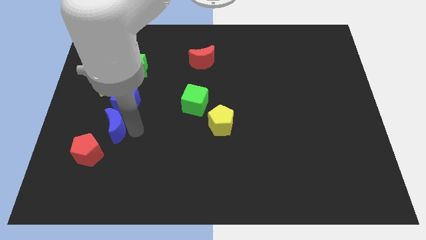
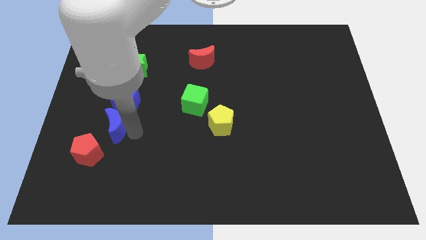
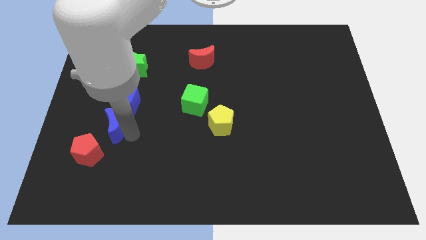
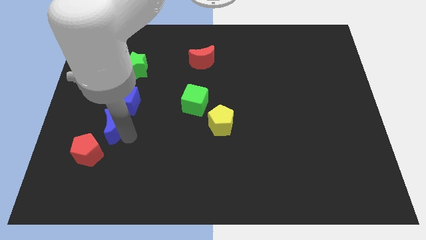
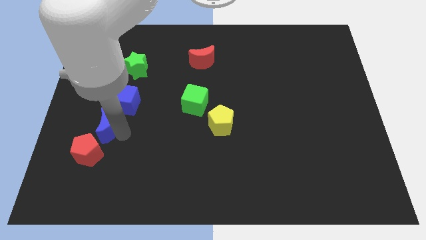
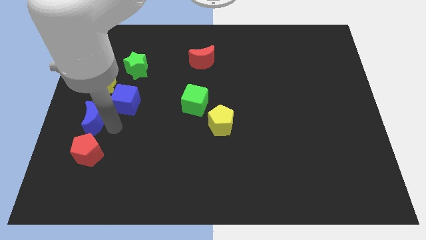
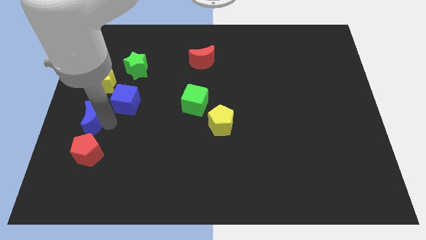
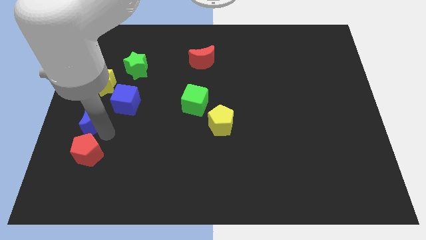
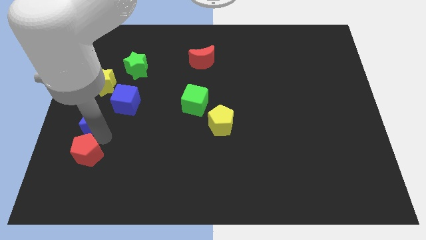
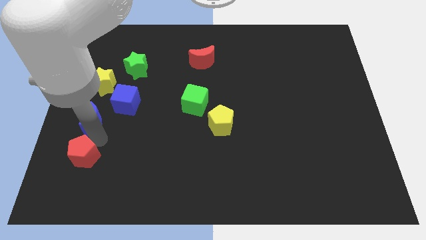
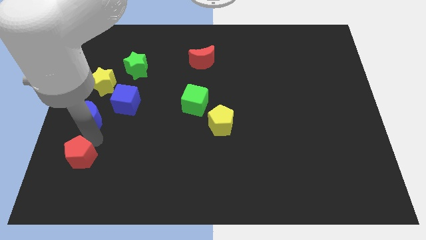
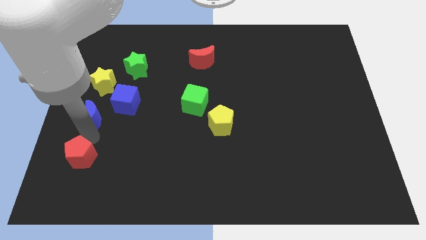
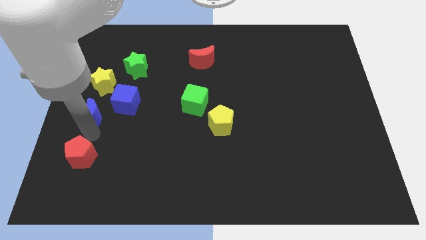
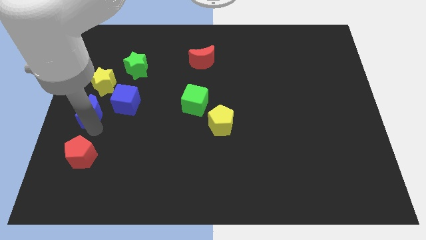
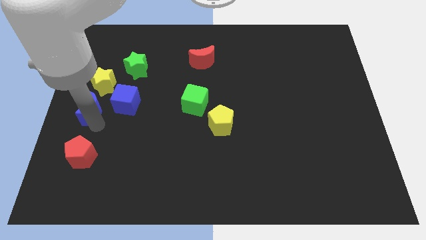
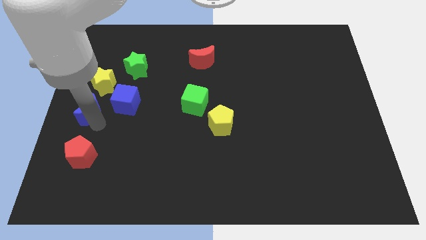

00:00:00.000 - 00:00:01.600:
move the blue moon away from the blue cube

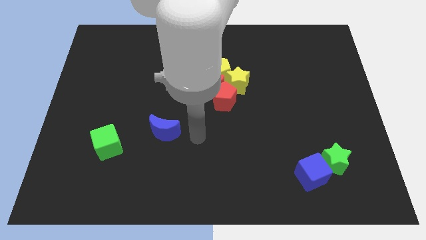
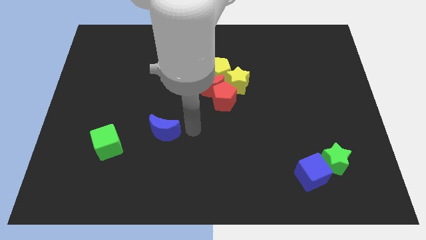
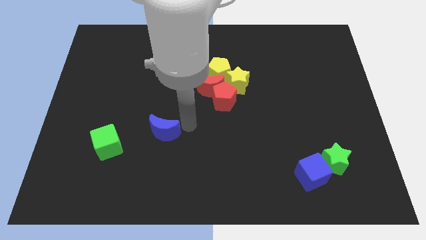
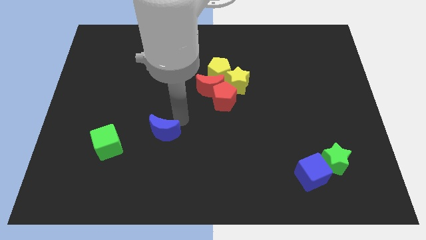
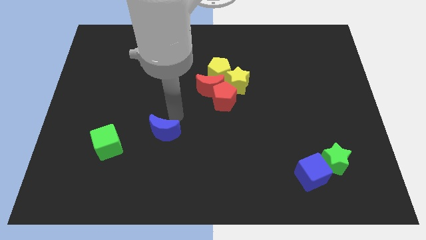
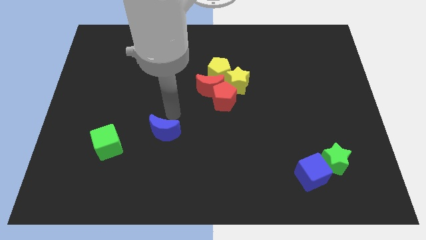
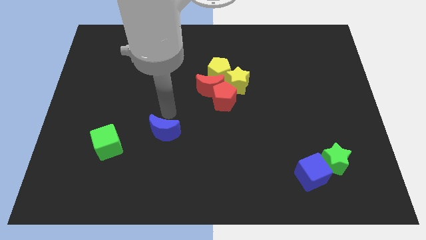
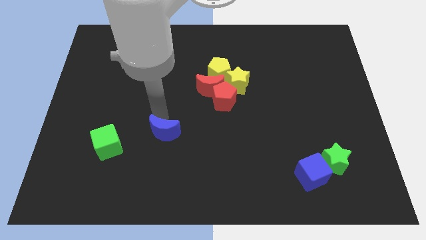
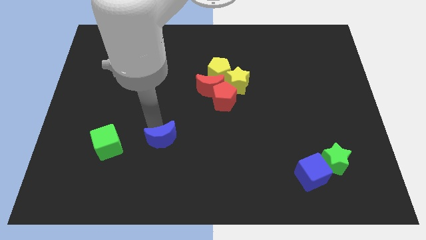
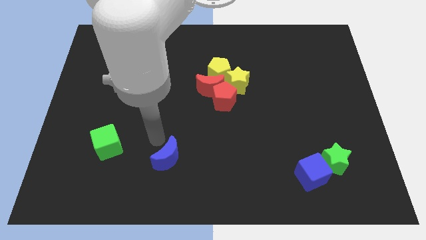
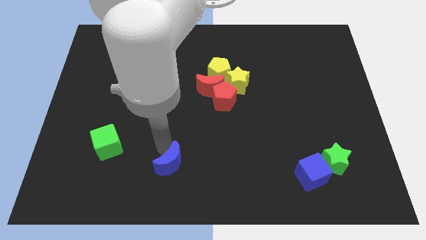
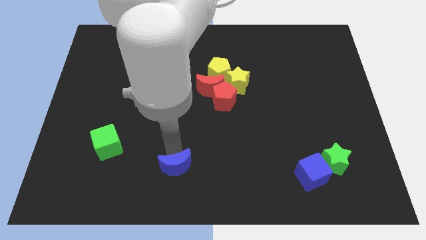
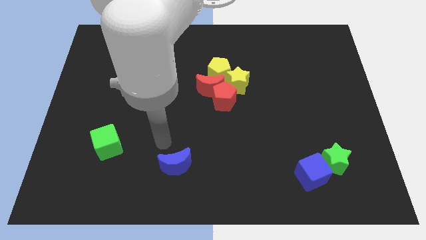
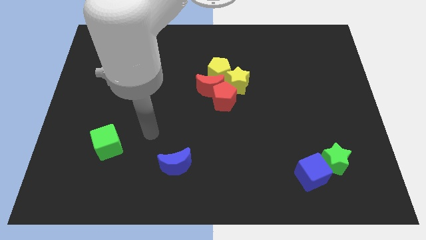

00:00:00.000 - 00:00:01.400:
push blue crescent downwards

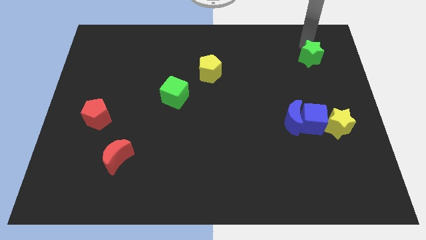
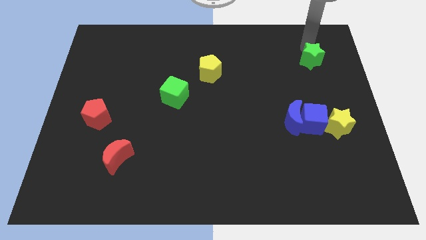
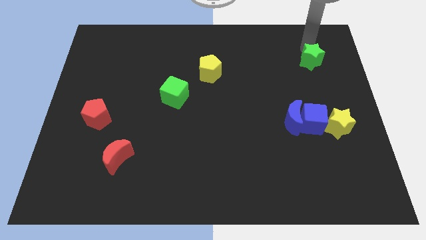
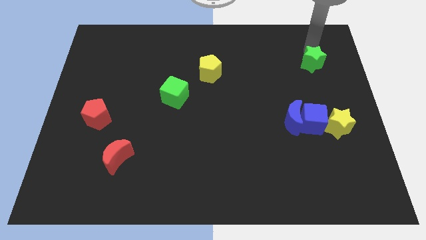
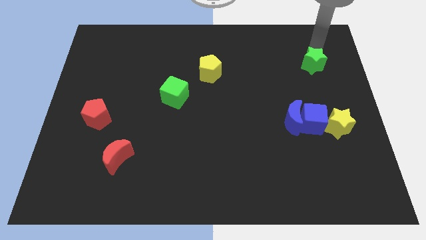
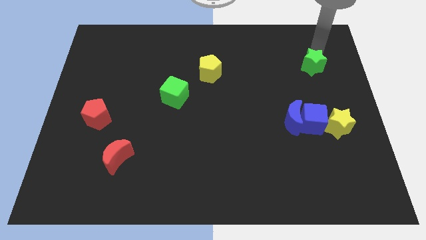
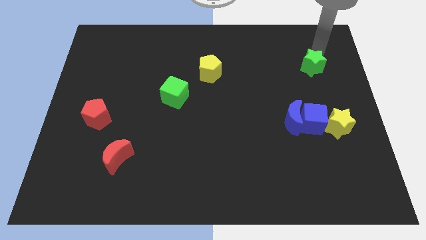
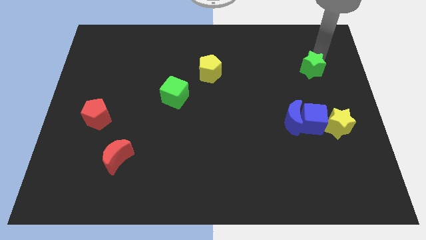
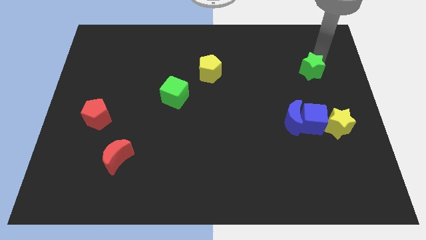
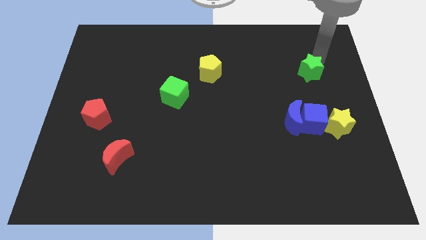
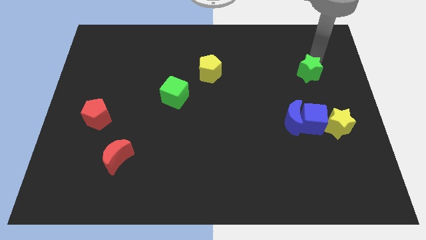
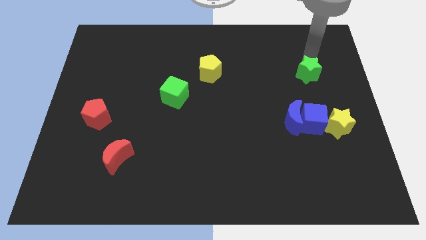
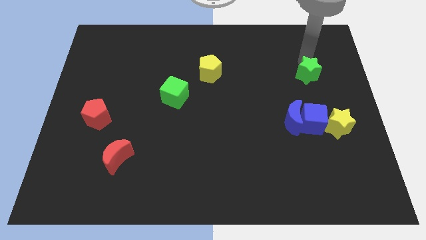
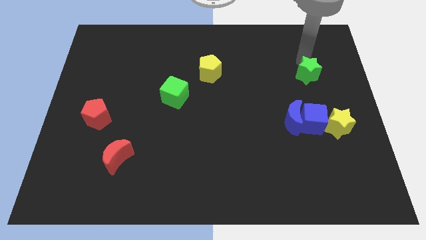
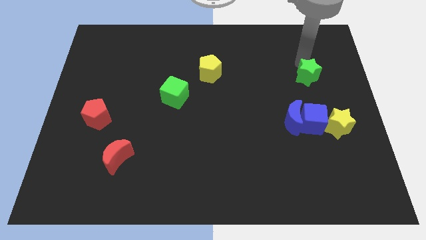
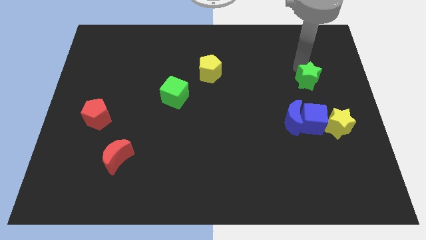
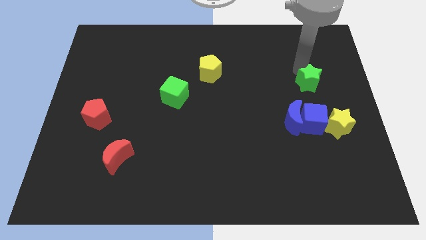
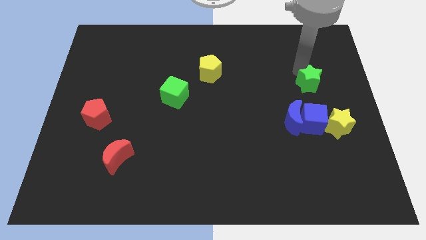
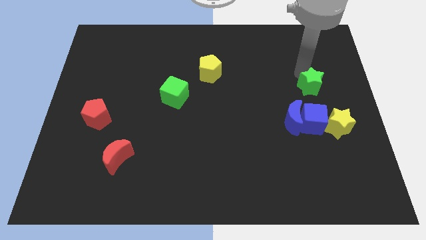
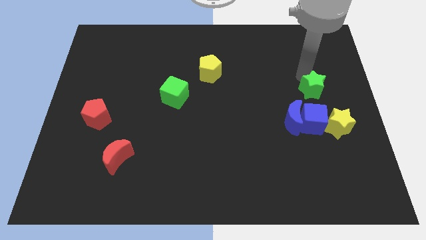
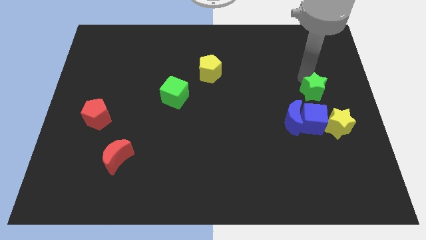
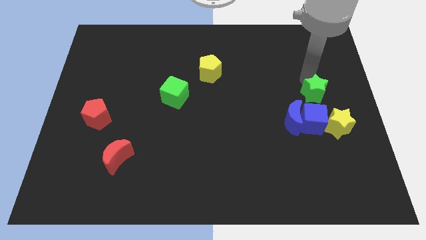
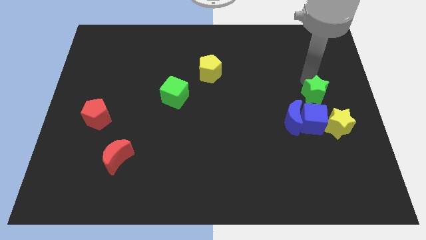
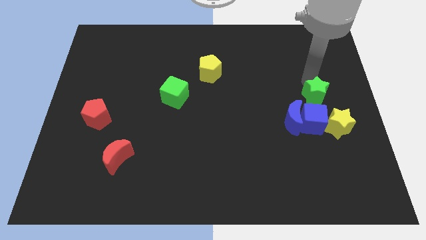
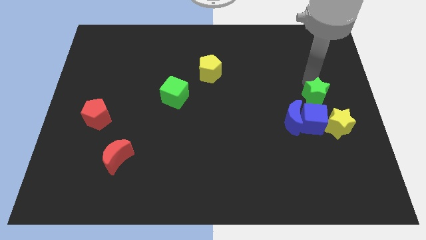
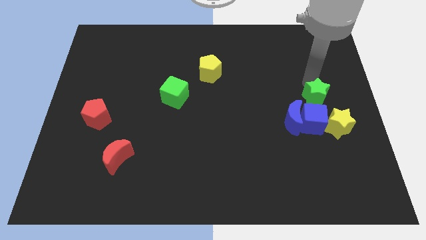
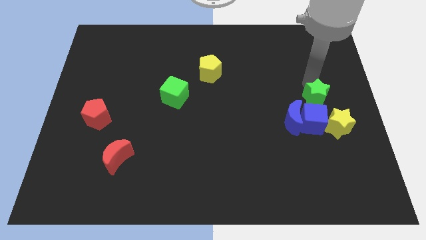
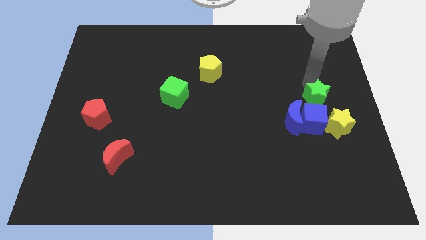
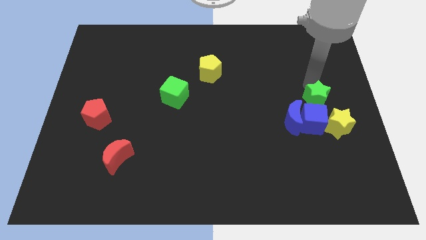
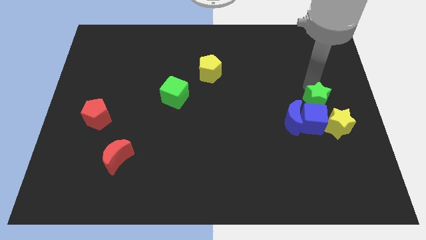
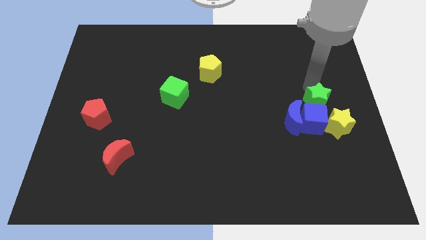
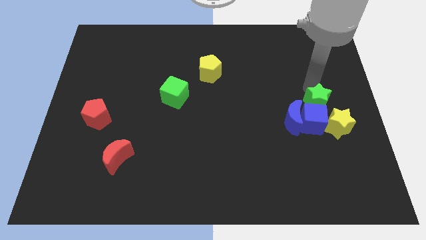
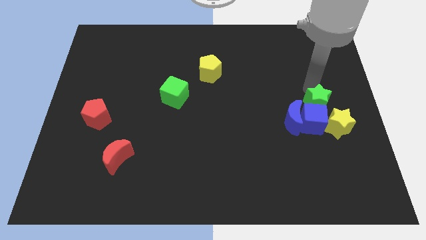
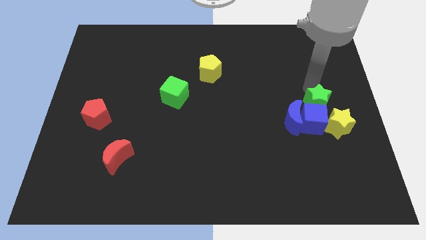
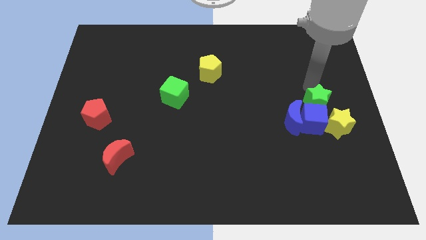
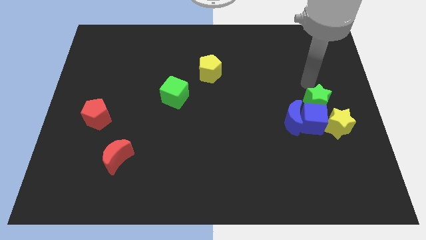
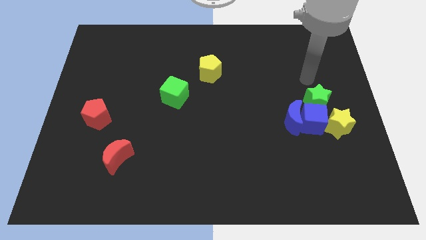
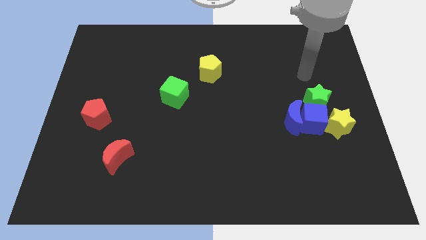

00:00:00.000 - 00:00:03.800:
drag green star above blue cube

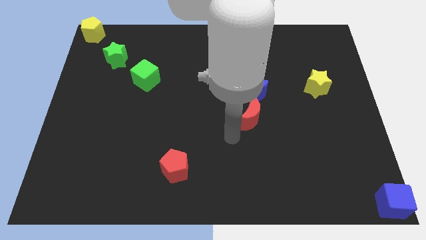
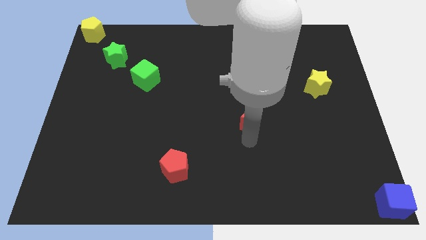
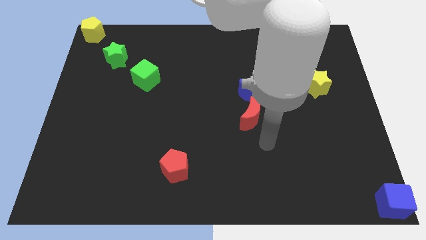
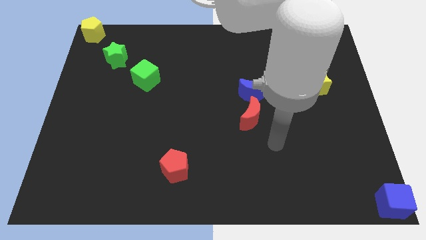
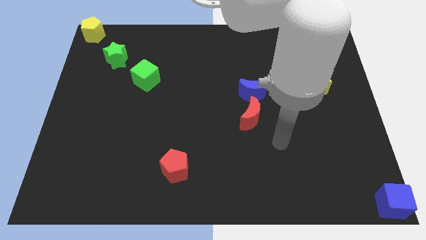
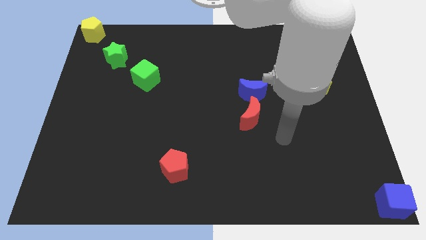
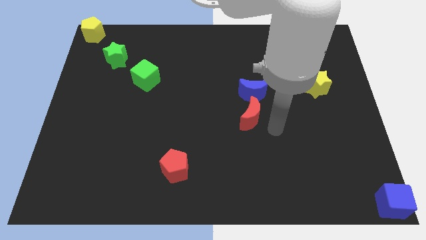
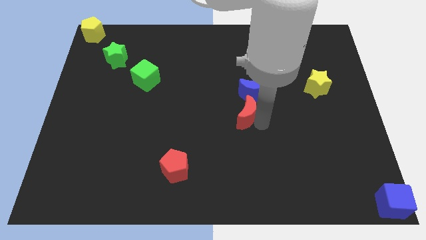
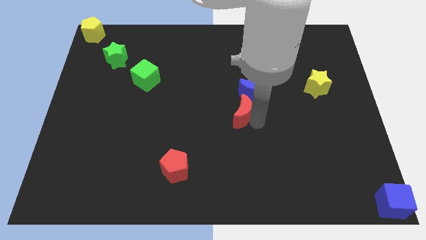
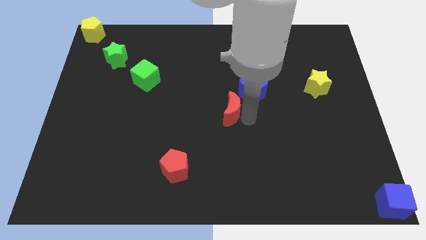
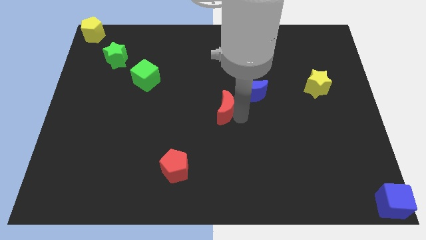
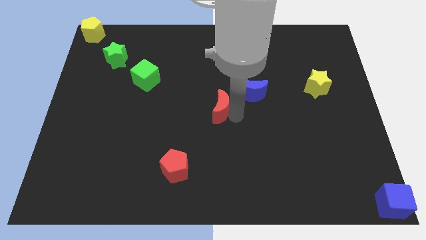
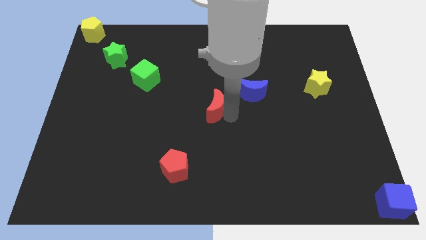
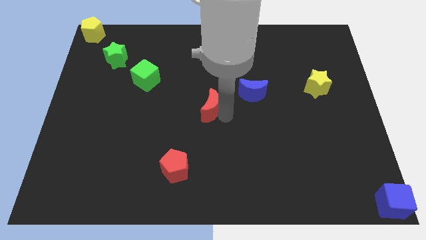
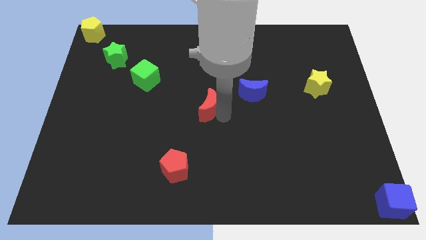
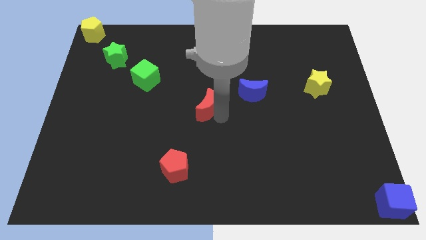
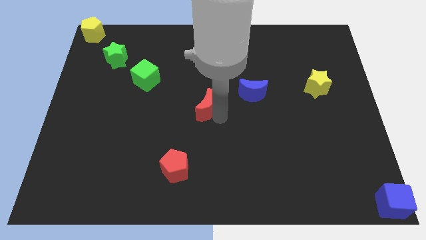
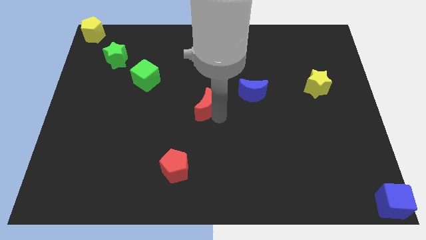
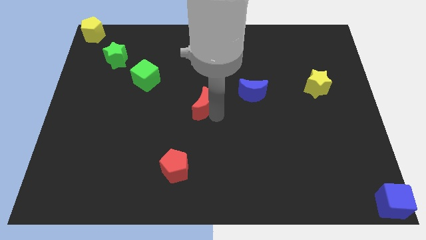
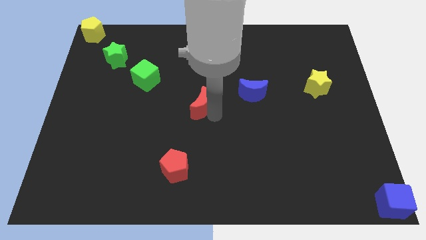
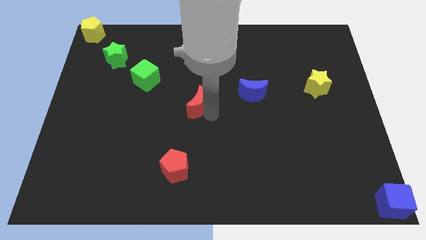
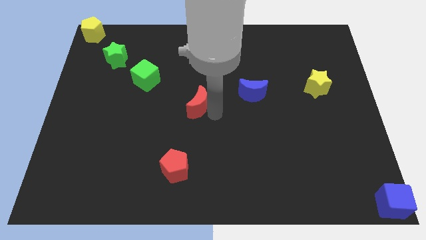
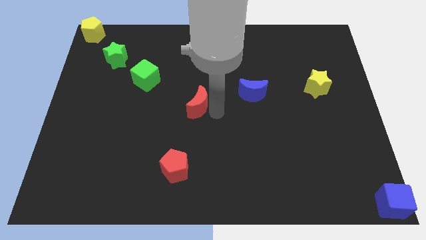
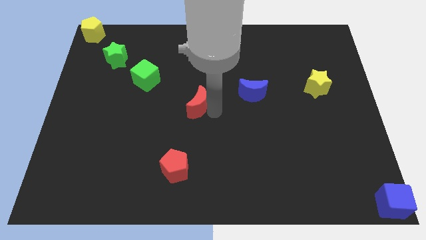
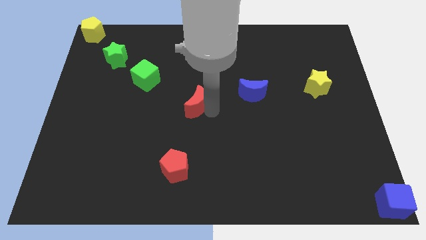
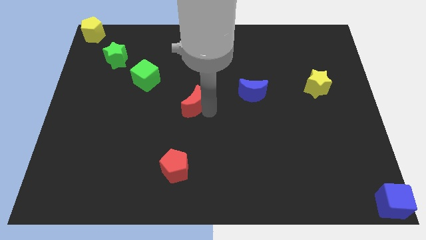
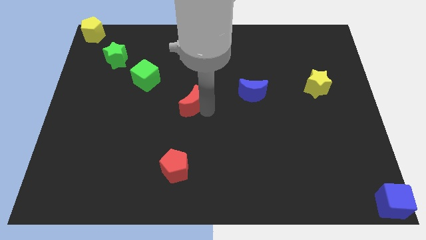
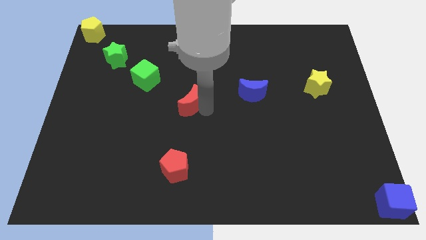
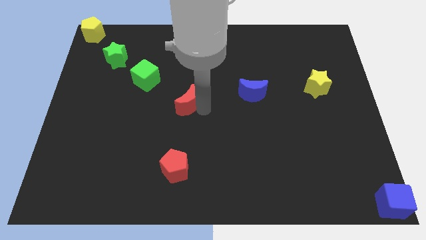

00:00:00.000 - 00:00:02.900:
separate red moon from blue moon
